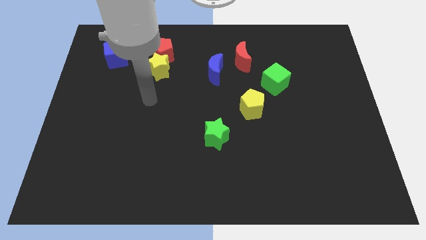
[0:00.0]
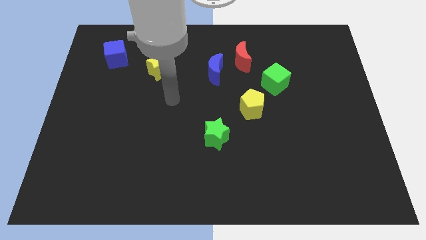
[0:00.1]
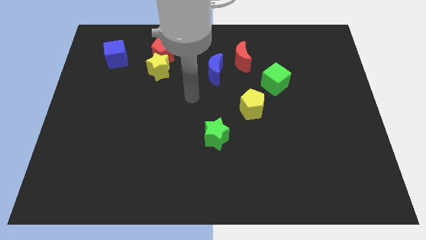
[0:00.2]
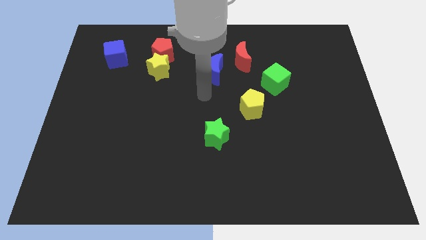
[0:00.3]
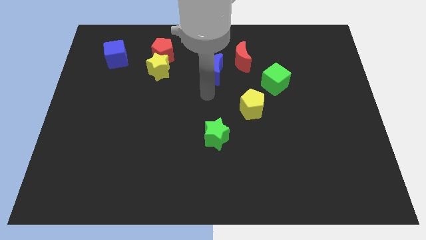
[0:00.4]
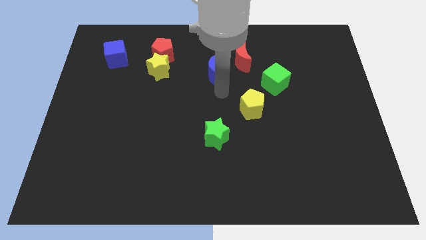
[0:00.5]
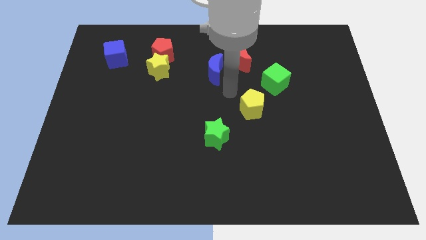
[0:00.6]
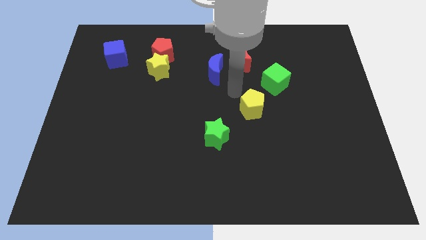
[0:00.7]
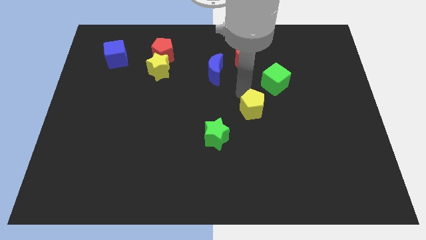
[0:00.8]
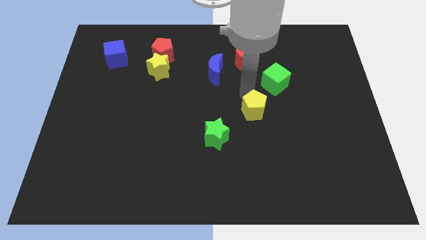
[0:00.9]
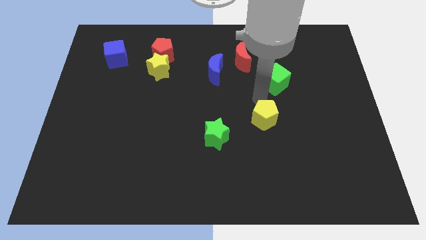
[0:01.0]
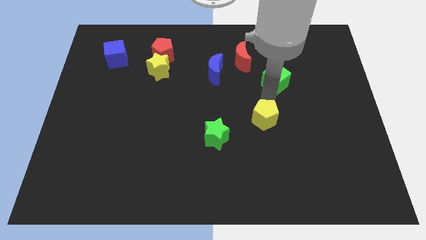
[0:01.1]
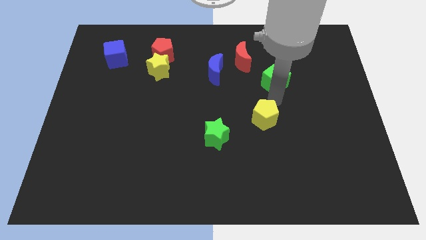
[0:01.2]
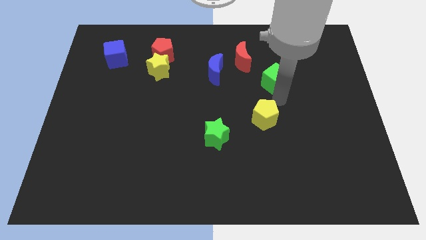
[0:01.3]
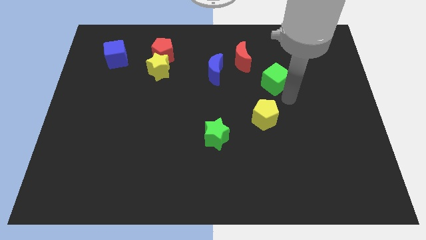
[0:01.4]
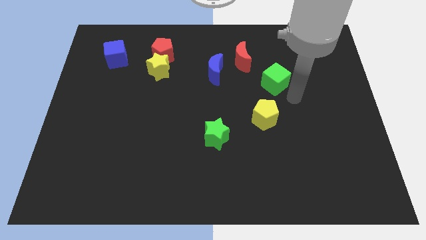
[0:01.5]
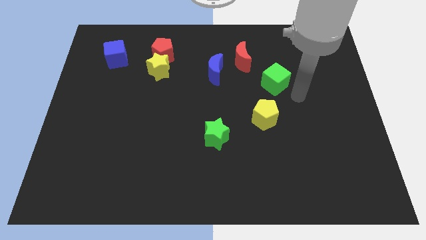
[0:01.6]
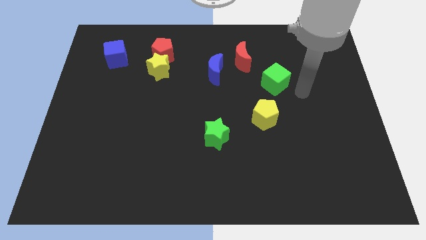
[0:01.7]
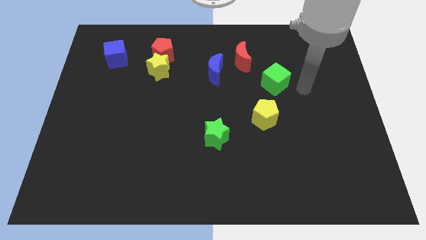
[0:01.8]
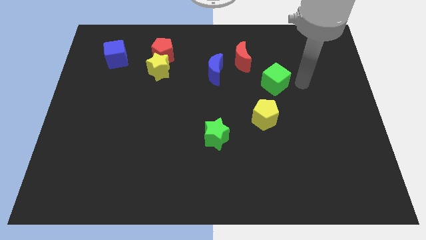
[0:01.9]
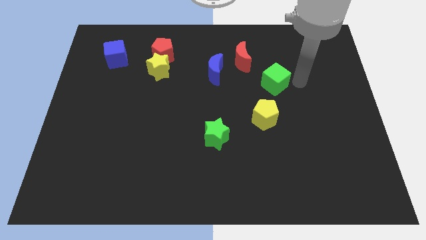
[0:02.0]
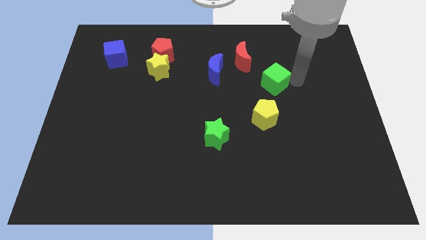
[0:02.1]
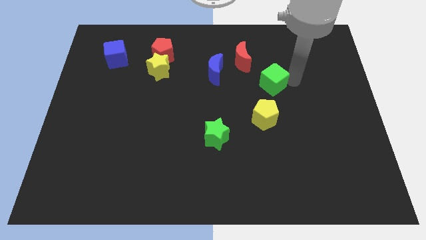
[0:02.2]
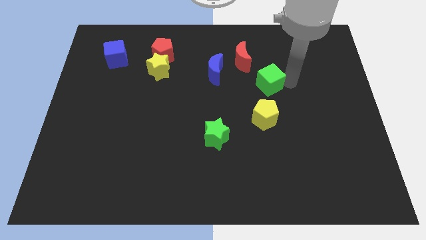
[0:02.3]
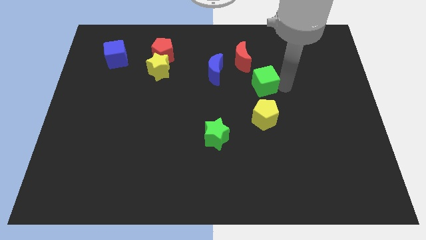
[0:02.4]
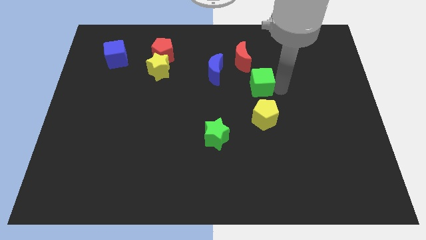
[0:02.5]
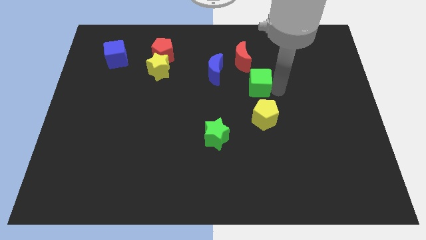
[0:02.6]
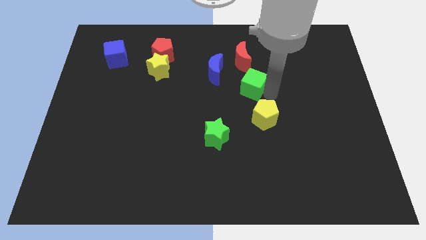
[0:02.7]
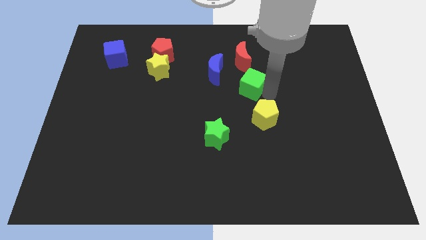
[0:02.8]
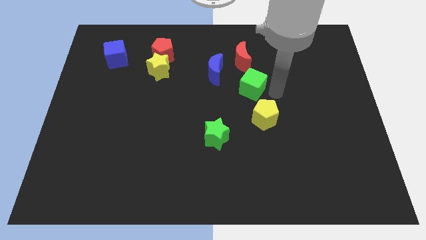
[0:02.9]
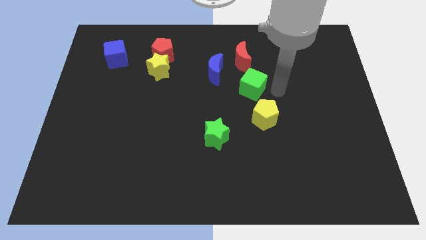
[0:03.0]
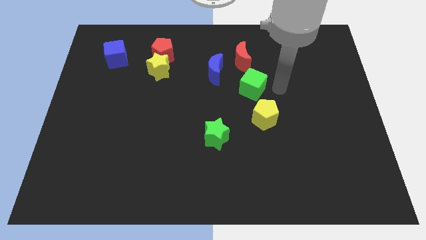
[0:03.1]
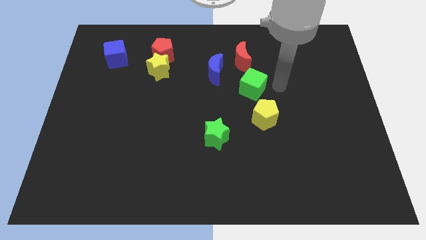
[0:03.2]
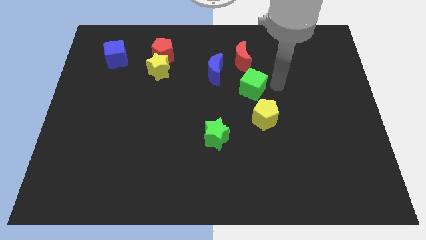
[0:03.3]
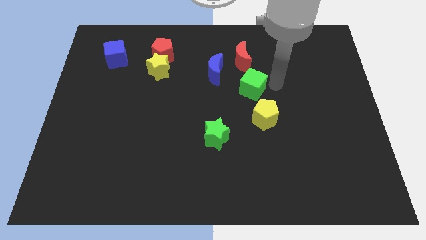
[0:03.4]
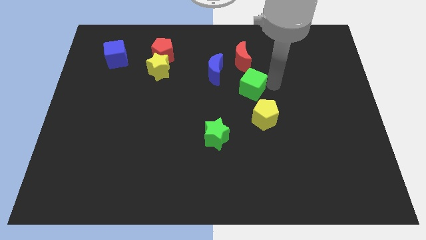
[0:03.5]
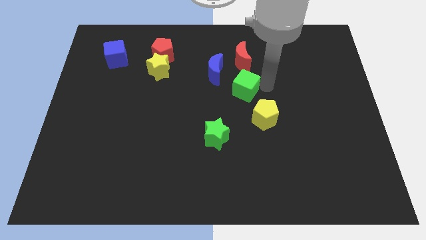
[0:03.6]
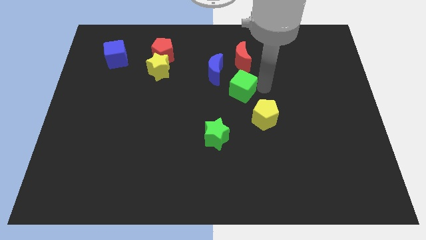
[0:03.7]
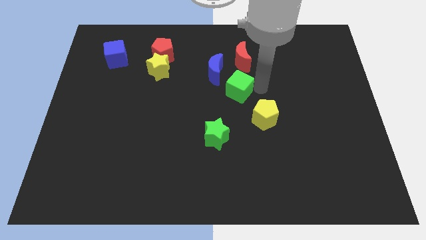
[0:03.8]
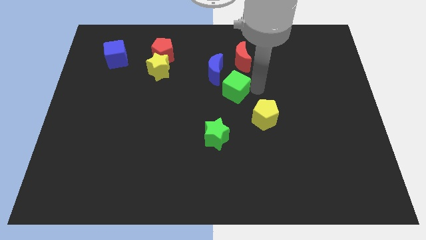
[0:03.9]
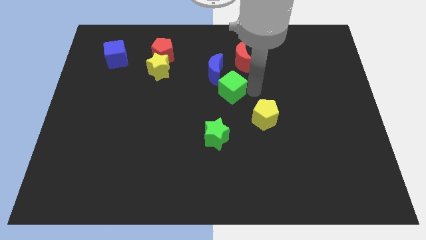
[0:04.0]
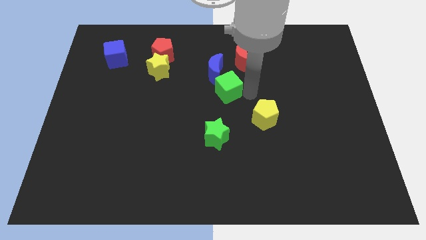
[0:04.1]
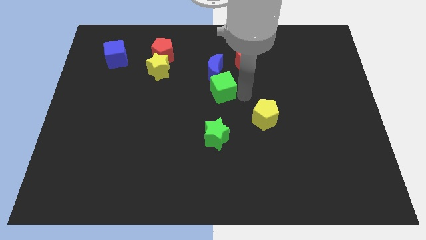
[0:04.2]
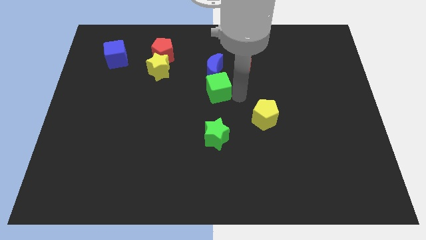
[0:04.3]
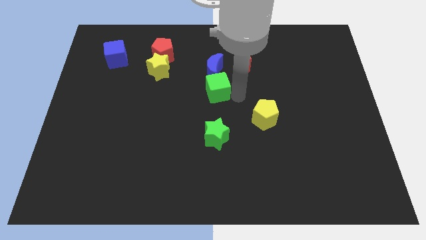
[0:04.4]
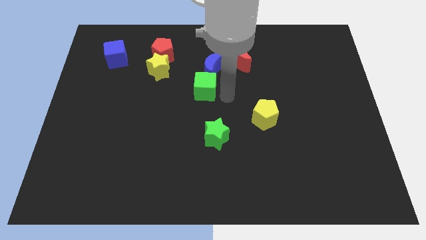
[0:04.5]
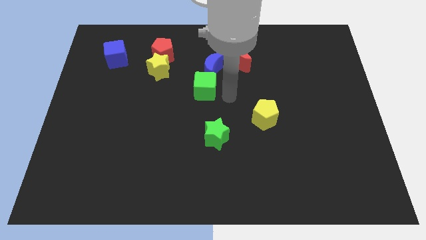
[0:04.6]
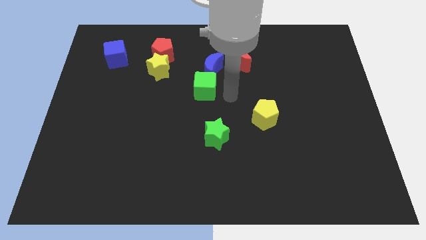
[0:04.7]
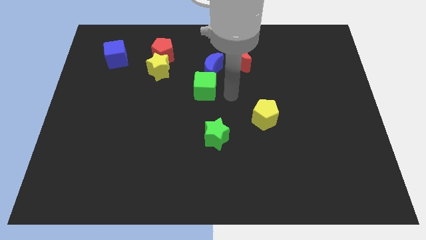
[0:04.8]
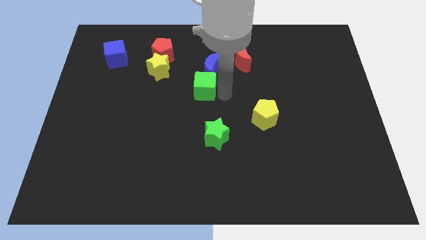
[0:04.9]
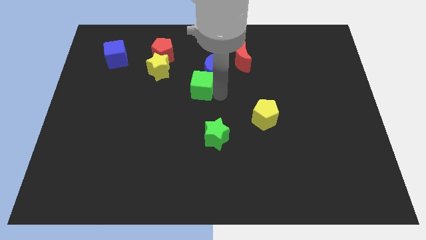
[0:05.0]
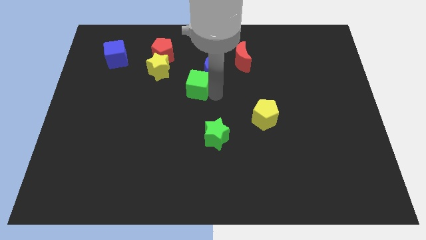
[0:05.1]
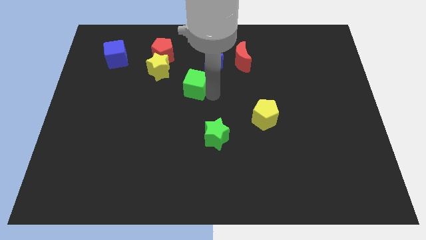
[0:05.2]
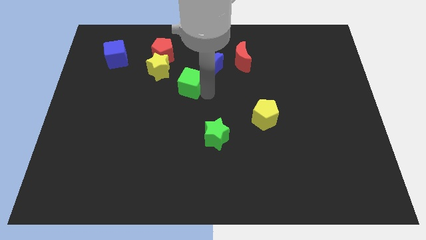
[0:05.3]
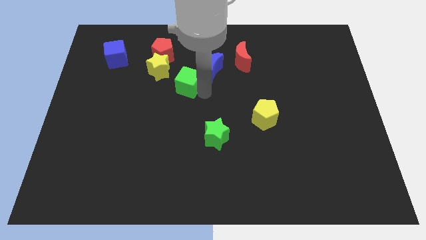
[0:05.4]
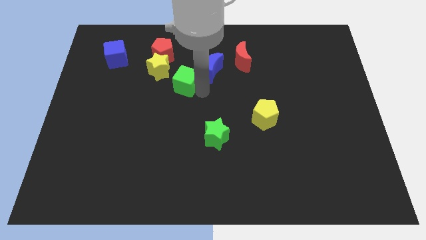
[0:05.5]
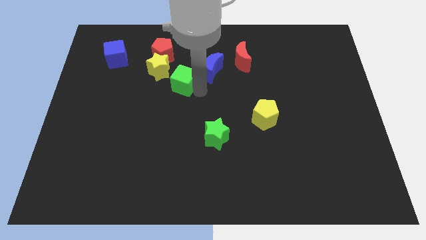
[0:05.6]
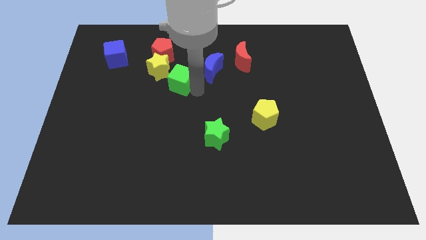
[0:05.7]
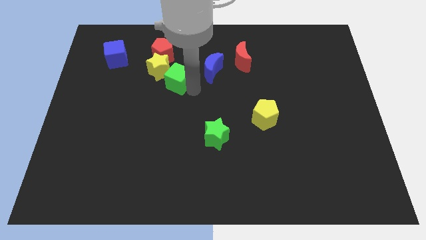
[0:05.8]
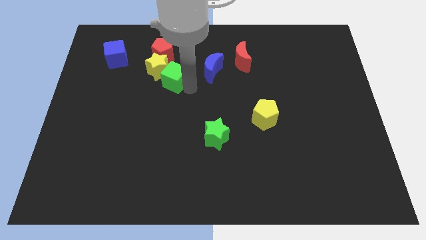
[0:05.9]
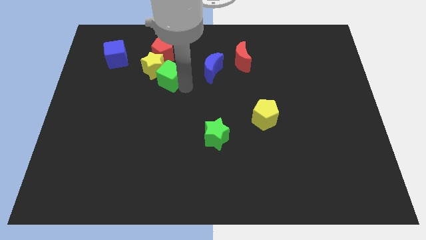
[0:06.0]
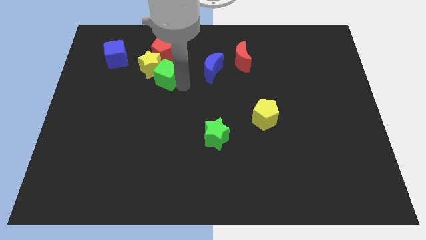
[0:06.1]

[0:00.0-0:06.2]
move the green cube to the yellow star

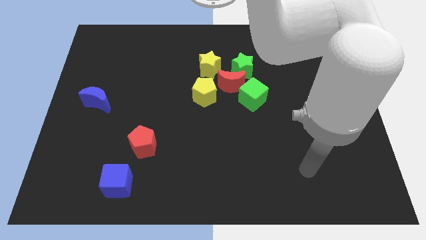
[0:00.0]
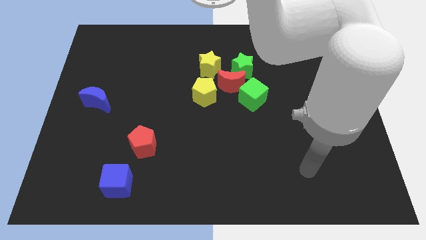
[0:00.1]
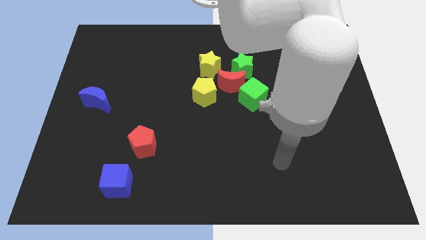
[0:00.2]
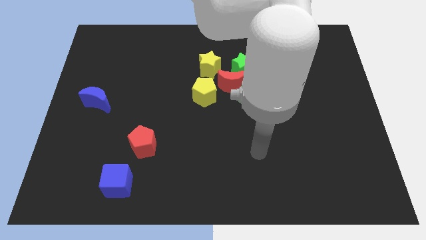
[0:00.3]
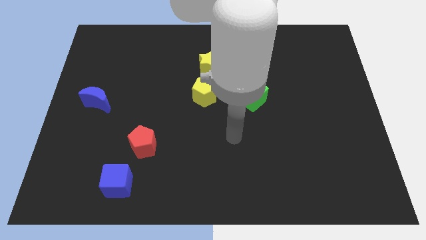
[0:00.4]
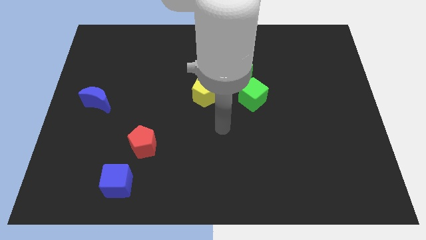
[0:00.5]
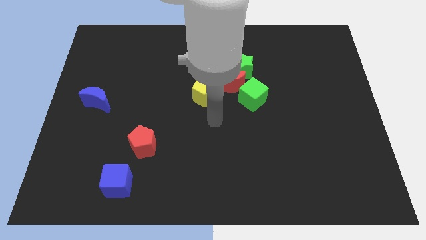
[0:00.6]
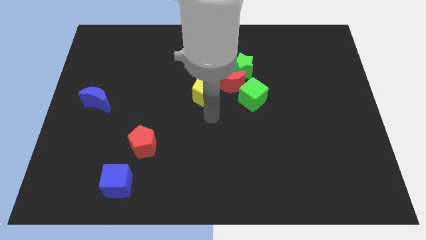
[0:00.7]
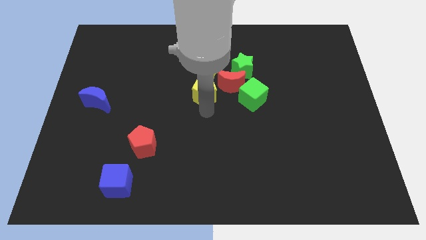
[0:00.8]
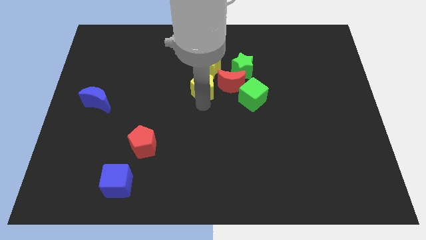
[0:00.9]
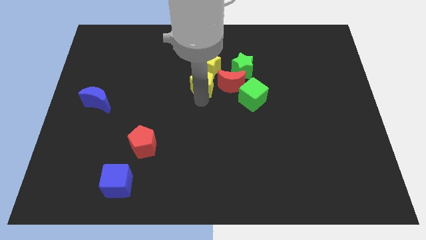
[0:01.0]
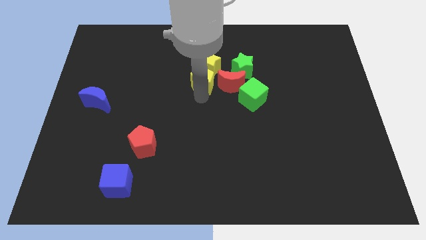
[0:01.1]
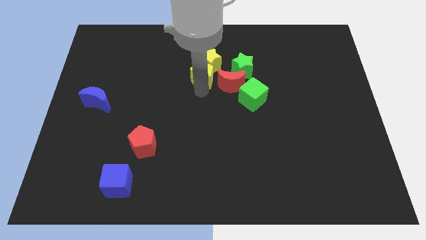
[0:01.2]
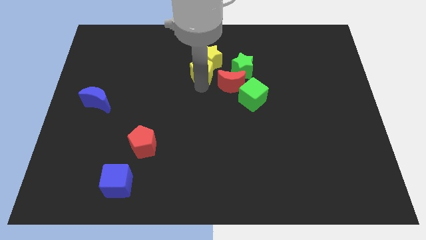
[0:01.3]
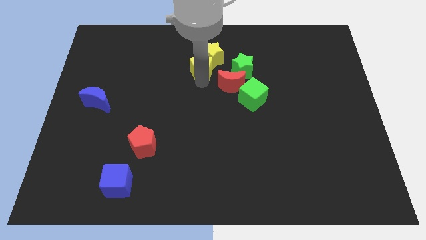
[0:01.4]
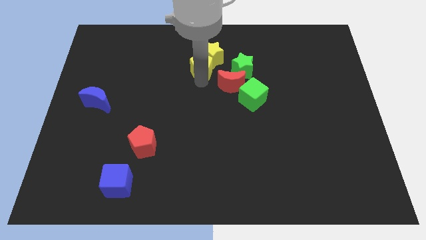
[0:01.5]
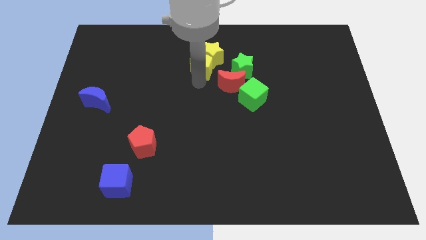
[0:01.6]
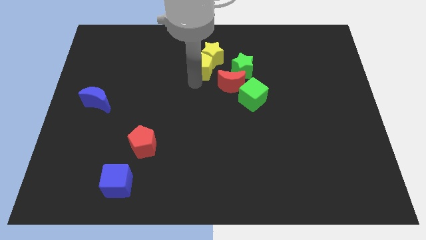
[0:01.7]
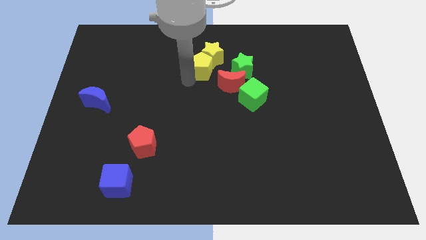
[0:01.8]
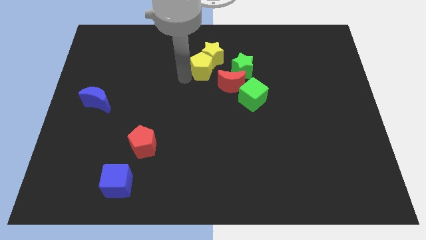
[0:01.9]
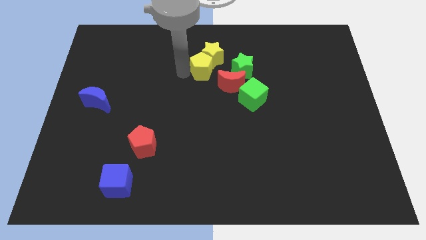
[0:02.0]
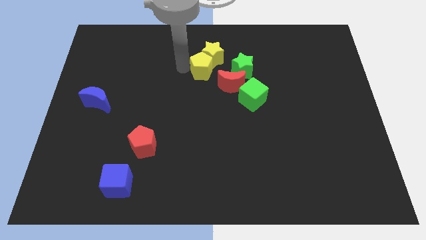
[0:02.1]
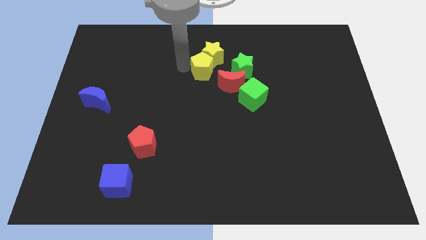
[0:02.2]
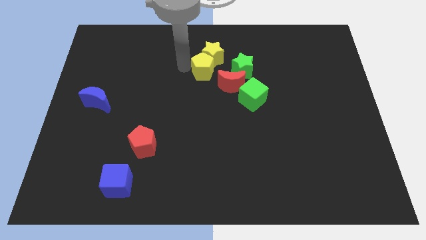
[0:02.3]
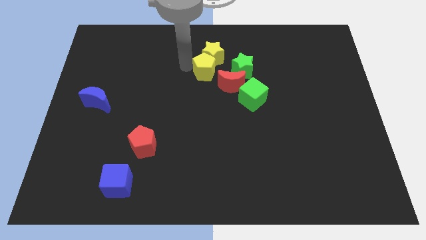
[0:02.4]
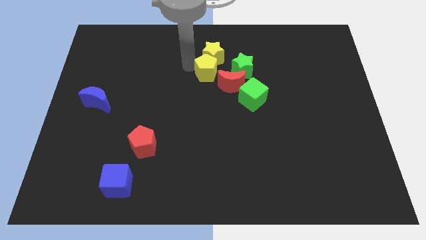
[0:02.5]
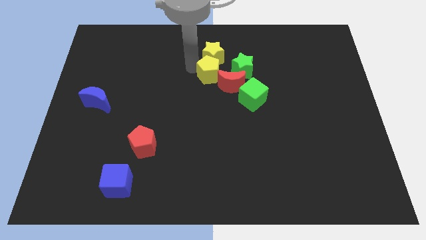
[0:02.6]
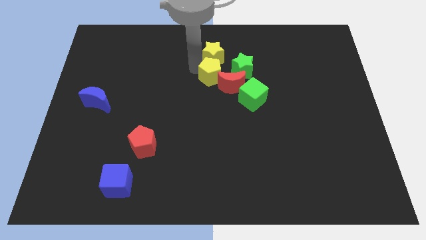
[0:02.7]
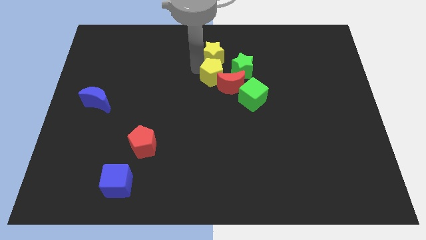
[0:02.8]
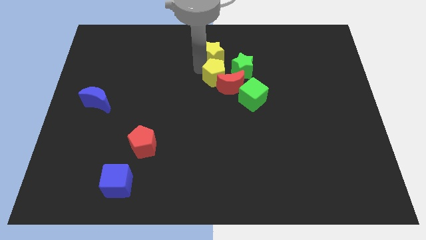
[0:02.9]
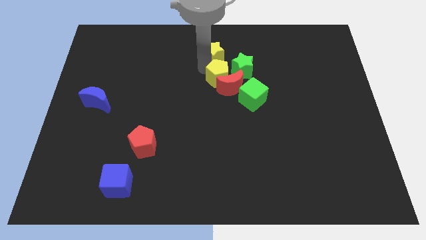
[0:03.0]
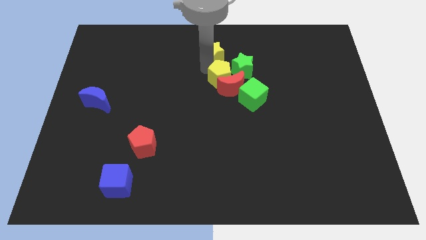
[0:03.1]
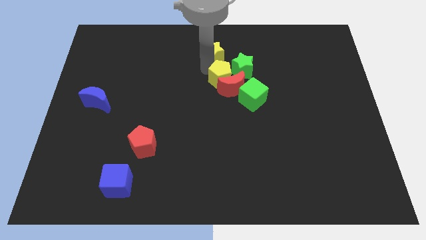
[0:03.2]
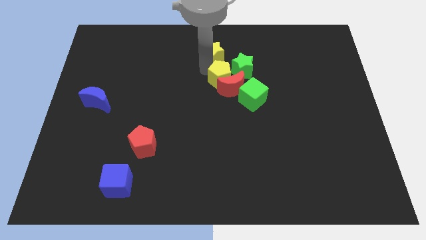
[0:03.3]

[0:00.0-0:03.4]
push the yellow pentagon next to the green star
